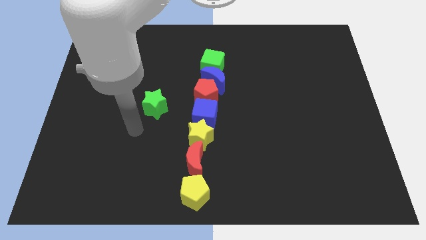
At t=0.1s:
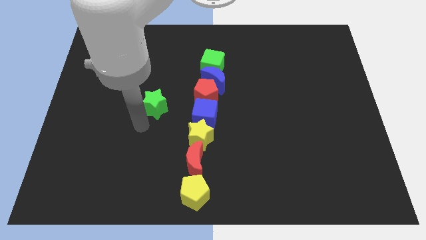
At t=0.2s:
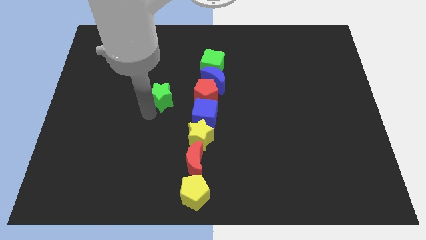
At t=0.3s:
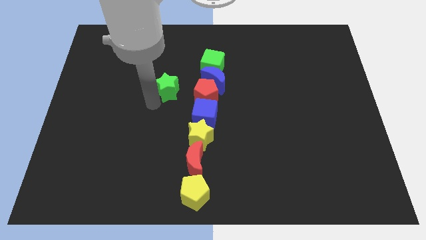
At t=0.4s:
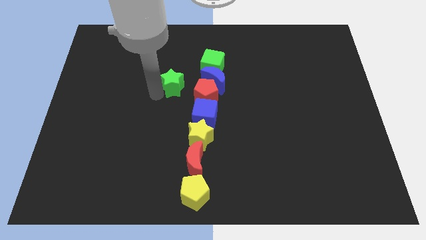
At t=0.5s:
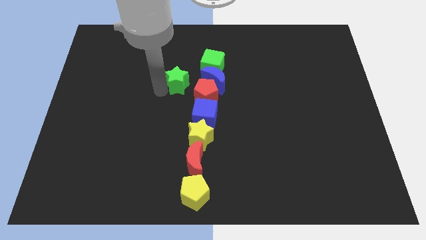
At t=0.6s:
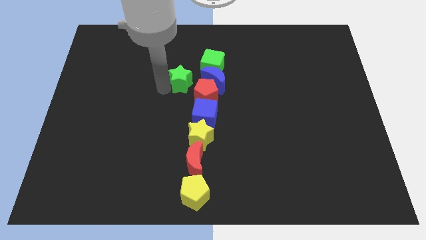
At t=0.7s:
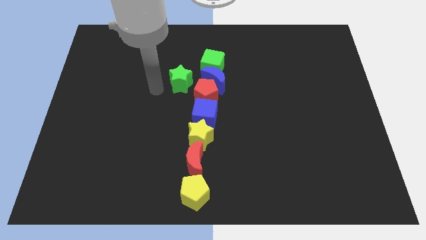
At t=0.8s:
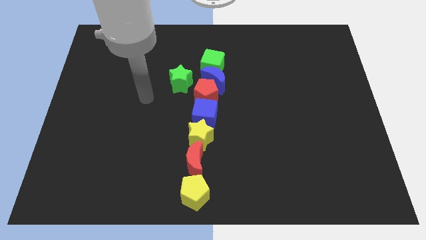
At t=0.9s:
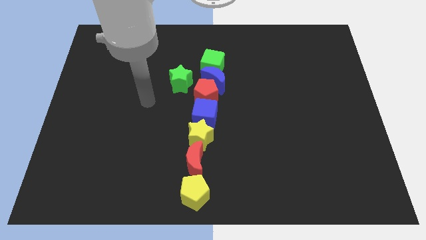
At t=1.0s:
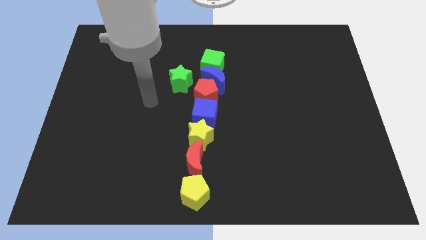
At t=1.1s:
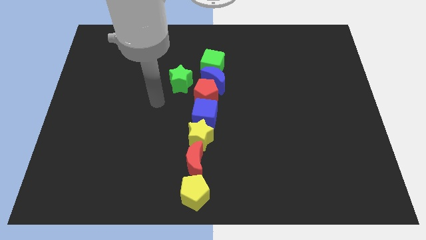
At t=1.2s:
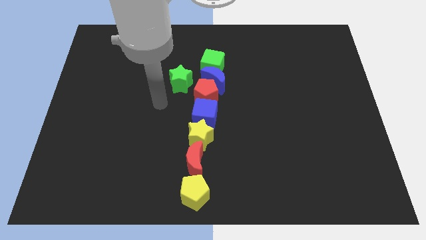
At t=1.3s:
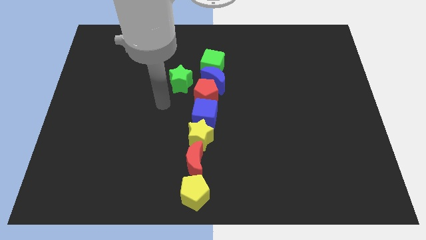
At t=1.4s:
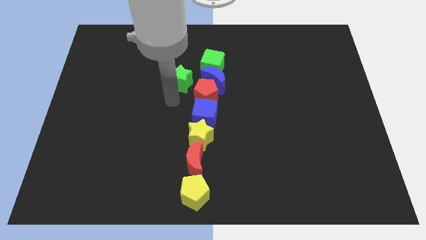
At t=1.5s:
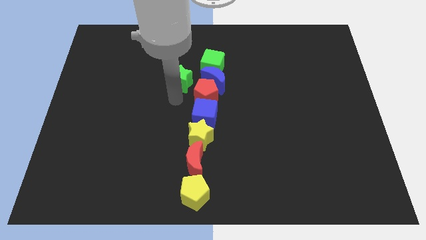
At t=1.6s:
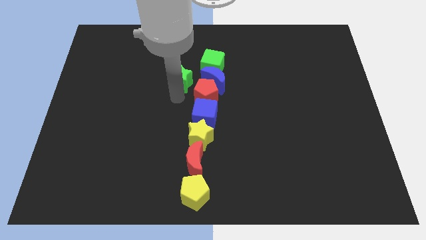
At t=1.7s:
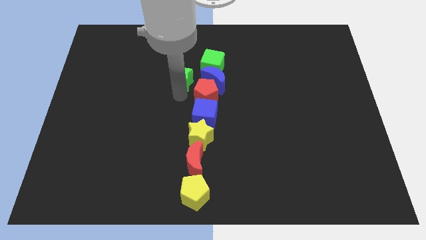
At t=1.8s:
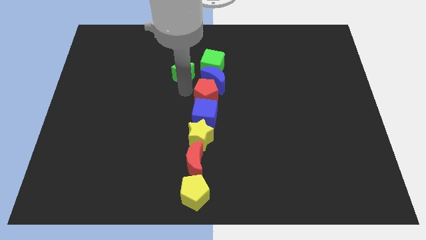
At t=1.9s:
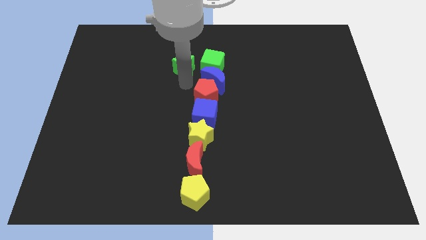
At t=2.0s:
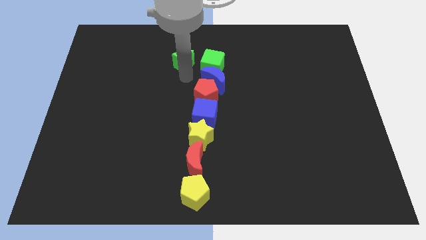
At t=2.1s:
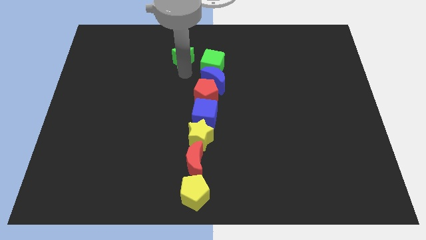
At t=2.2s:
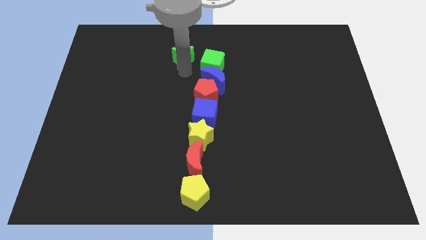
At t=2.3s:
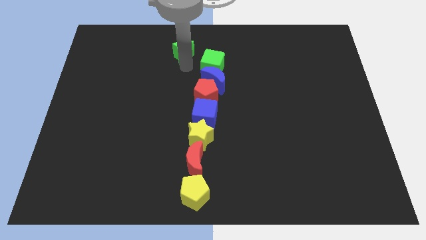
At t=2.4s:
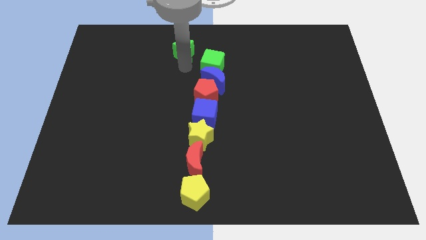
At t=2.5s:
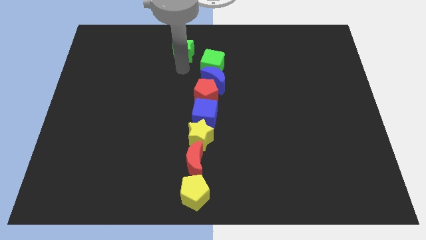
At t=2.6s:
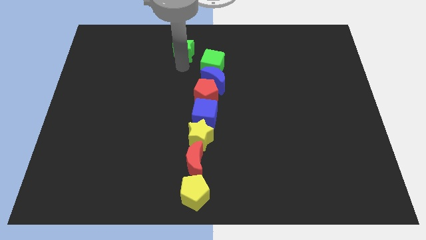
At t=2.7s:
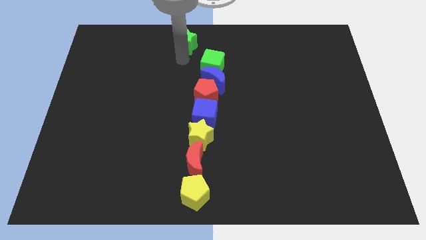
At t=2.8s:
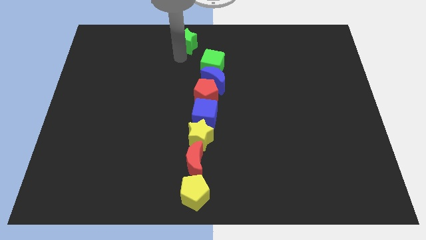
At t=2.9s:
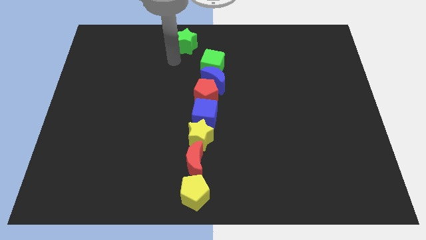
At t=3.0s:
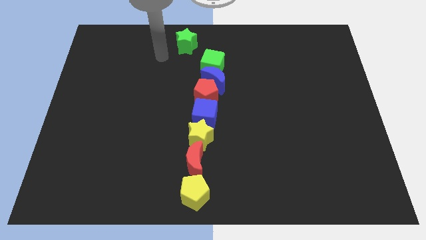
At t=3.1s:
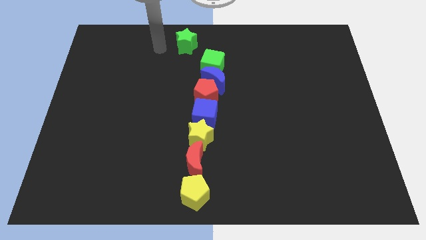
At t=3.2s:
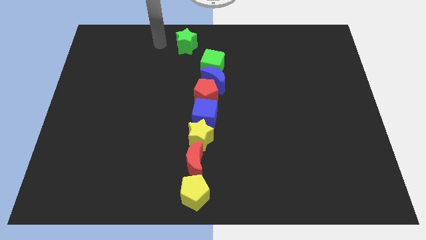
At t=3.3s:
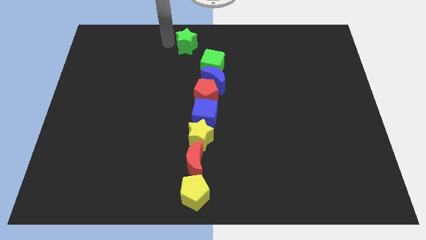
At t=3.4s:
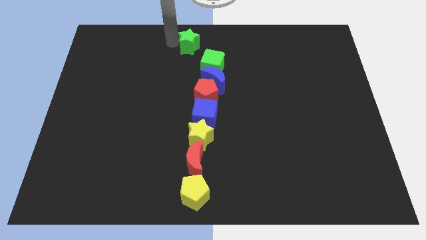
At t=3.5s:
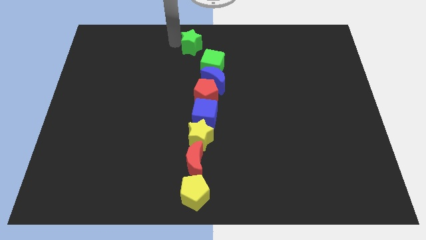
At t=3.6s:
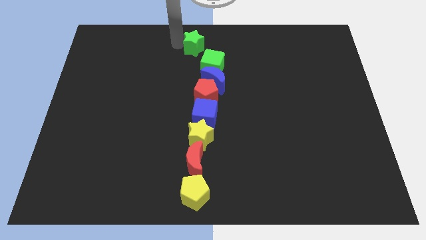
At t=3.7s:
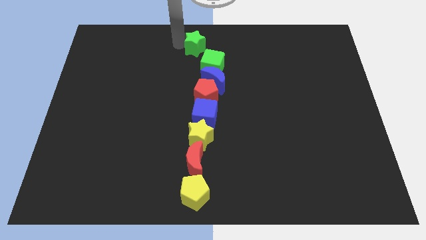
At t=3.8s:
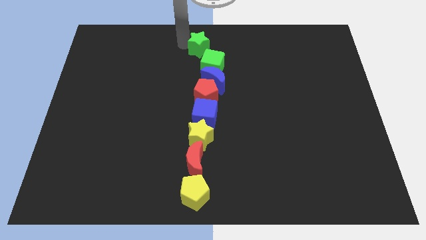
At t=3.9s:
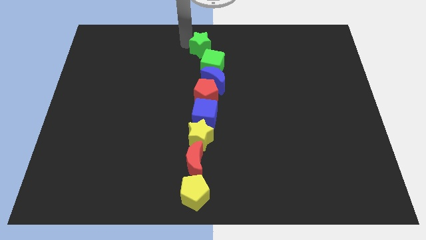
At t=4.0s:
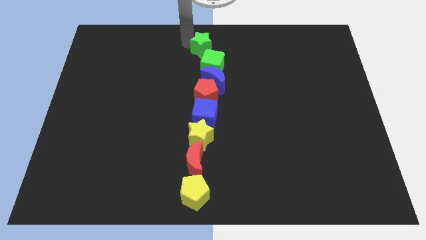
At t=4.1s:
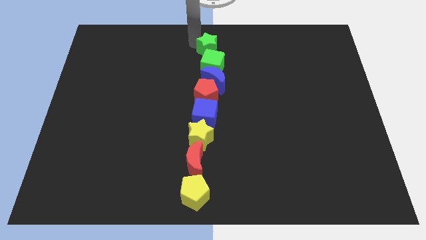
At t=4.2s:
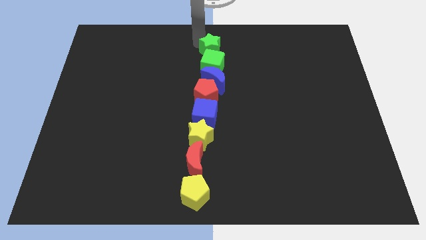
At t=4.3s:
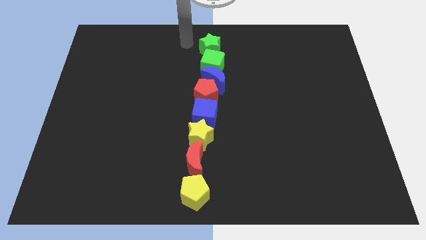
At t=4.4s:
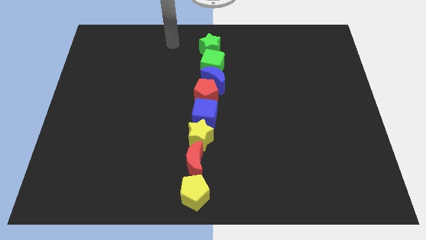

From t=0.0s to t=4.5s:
push green star towards top center of the board

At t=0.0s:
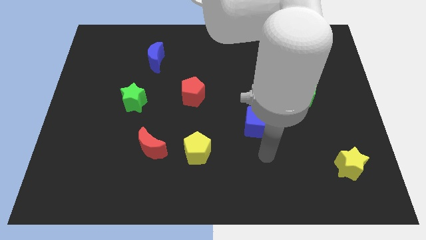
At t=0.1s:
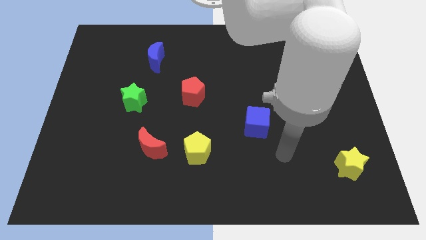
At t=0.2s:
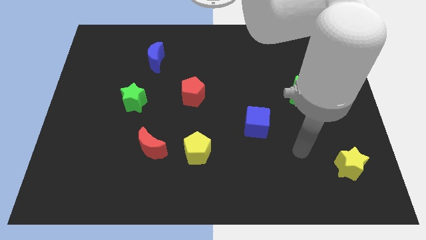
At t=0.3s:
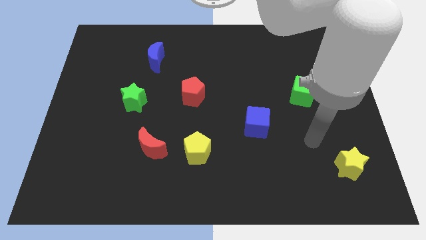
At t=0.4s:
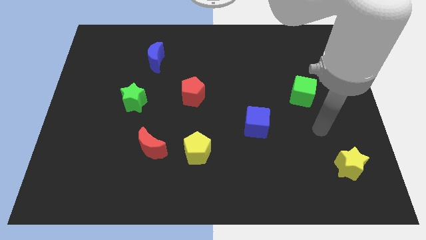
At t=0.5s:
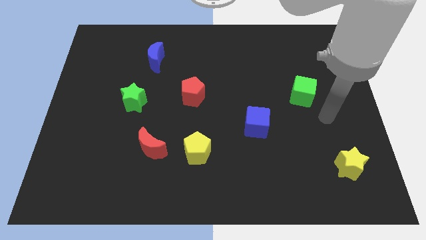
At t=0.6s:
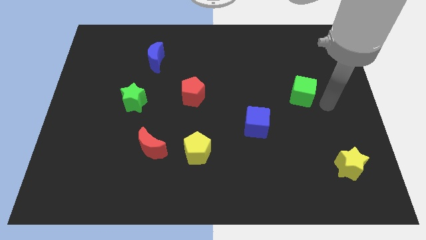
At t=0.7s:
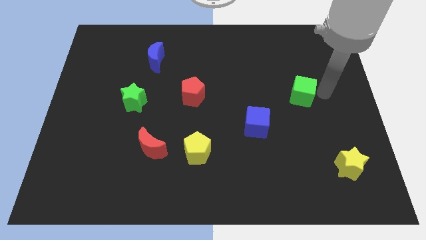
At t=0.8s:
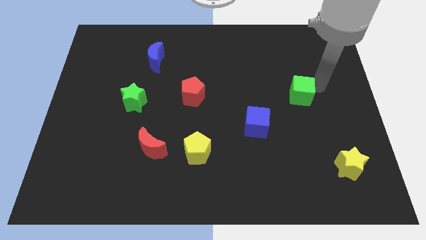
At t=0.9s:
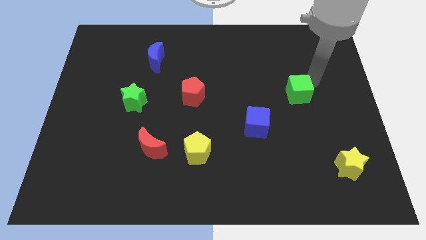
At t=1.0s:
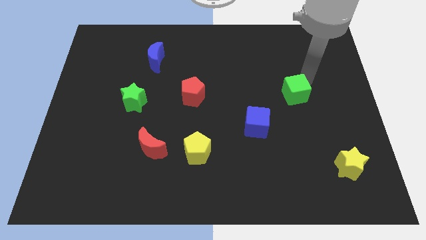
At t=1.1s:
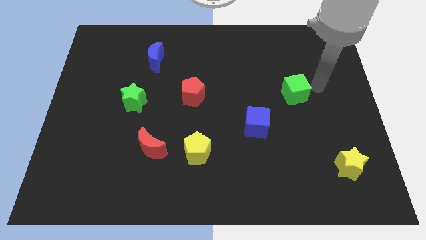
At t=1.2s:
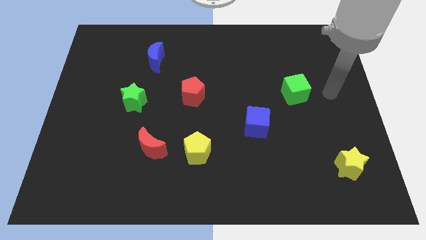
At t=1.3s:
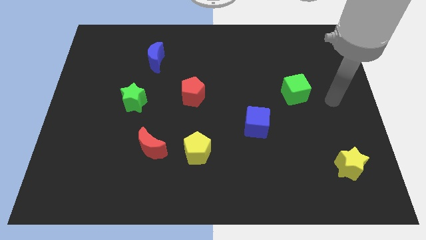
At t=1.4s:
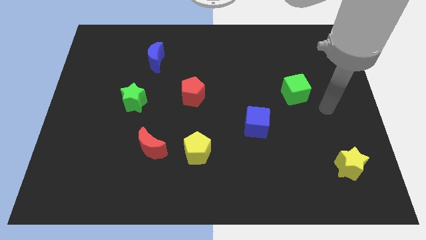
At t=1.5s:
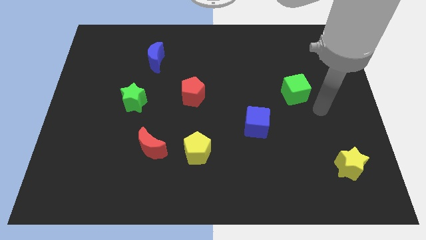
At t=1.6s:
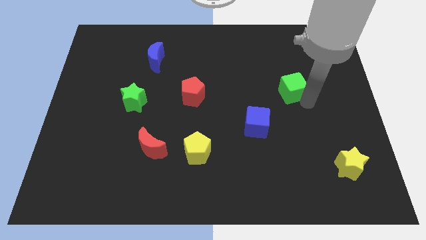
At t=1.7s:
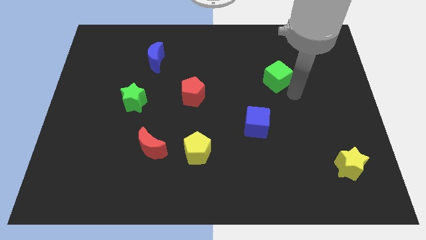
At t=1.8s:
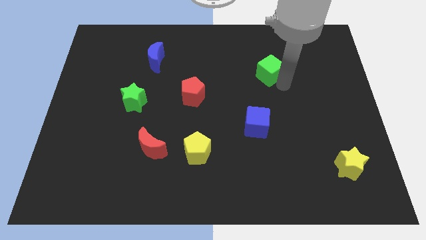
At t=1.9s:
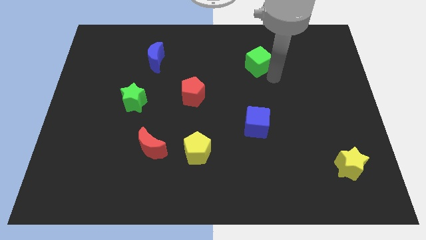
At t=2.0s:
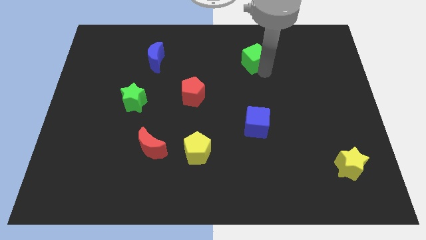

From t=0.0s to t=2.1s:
place green cube vertically on the top side of the blue cube

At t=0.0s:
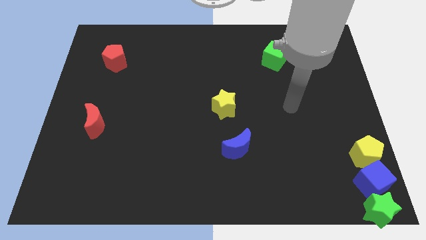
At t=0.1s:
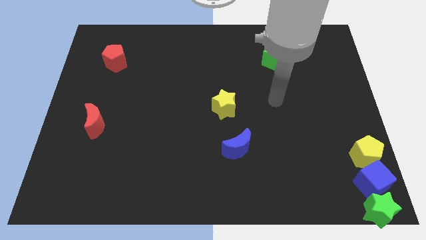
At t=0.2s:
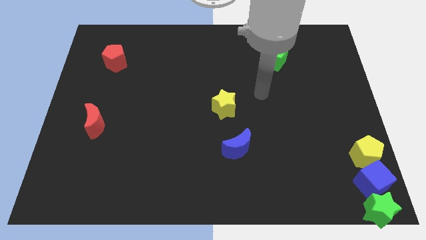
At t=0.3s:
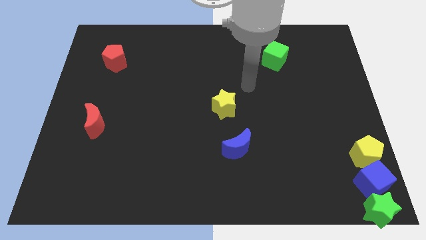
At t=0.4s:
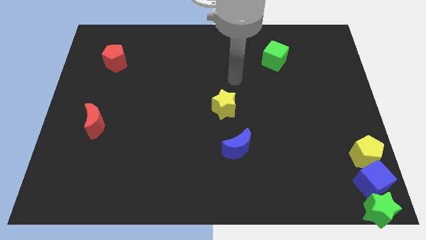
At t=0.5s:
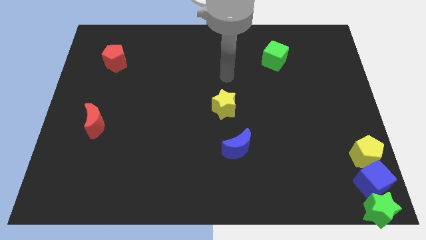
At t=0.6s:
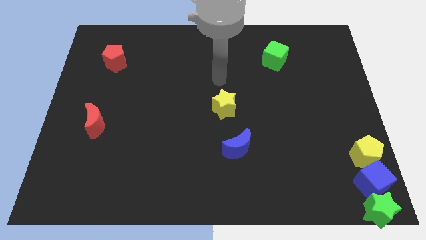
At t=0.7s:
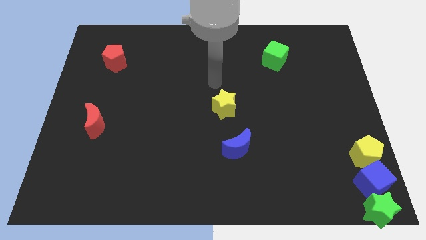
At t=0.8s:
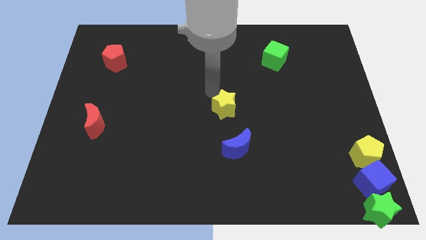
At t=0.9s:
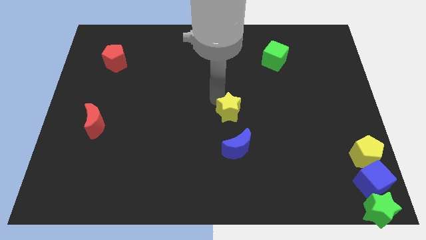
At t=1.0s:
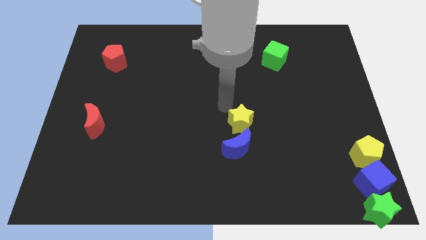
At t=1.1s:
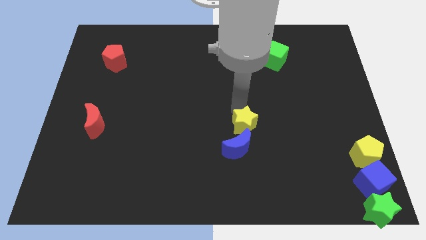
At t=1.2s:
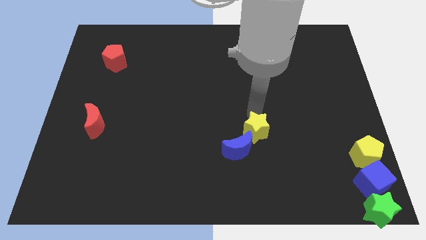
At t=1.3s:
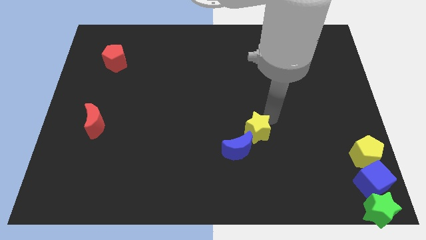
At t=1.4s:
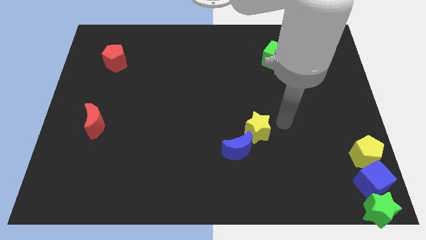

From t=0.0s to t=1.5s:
push the yellow star right above the blue crescent

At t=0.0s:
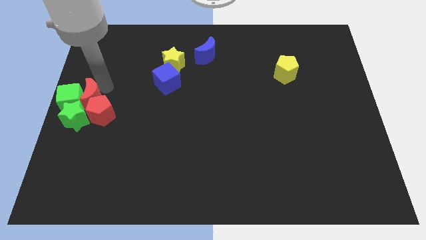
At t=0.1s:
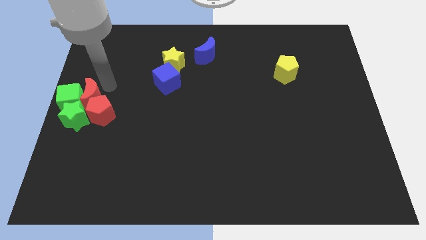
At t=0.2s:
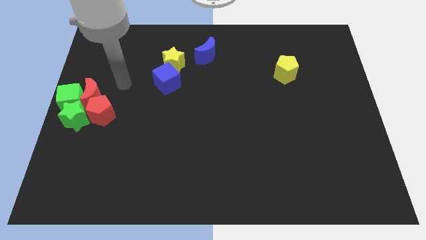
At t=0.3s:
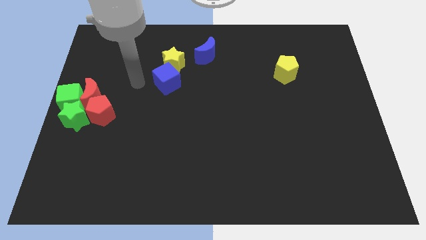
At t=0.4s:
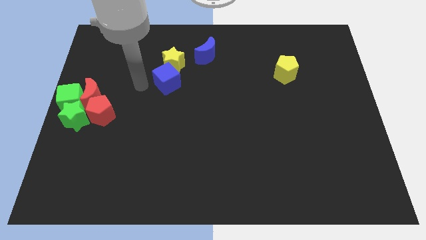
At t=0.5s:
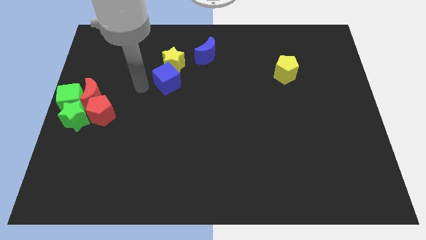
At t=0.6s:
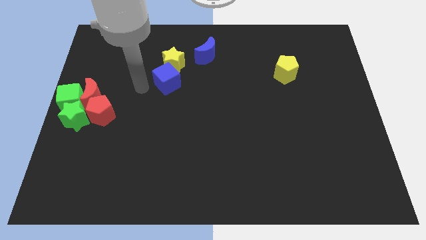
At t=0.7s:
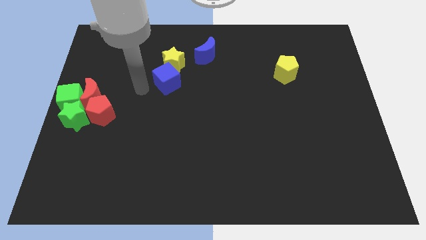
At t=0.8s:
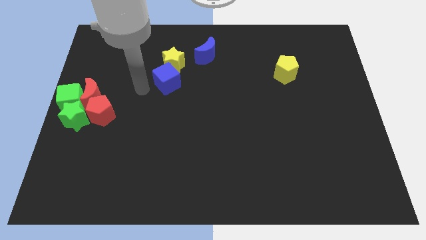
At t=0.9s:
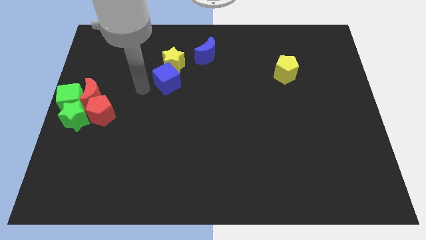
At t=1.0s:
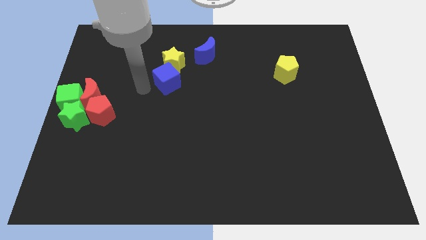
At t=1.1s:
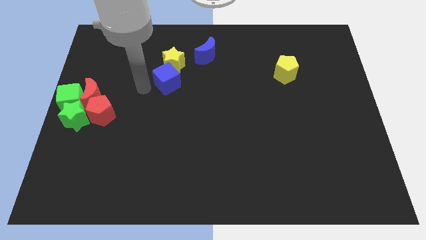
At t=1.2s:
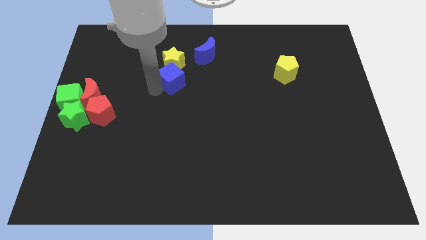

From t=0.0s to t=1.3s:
move your arm to the left of blue cube
